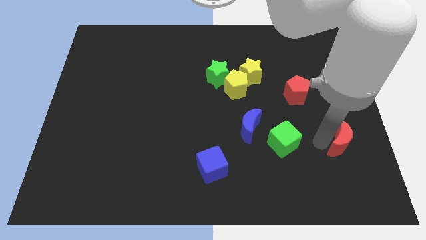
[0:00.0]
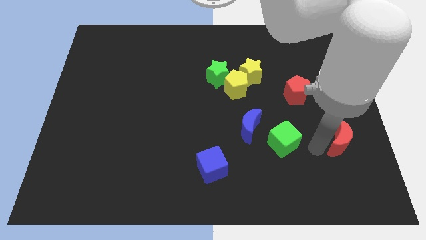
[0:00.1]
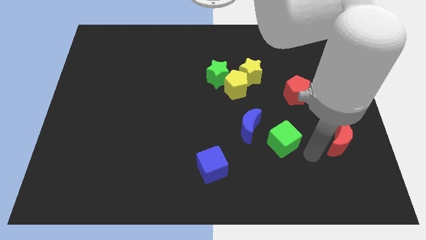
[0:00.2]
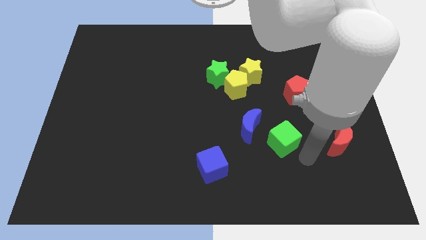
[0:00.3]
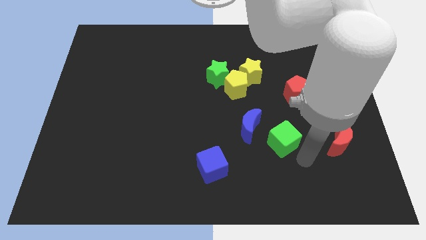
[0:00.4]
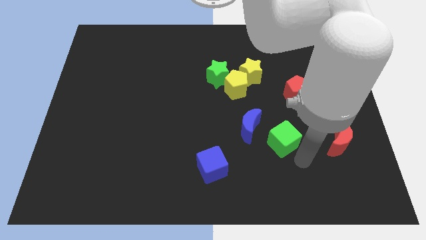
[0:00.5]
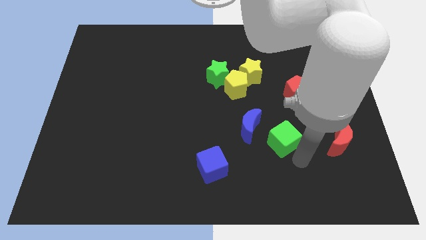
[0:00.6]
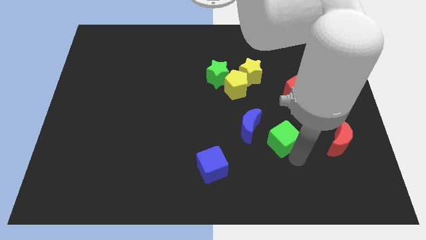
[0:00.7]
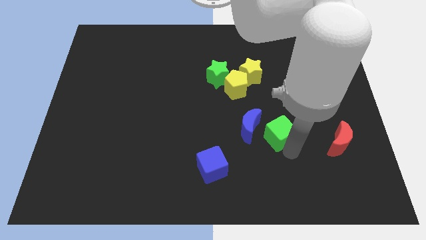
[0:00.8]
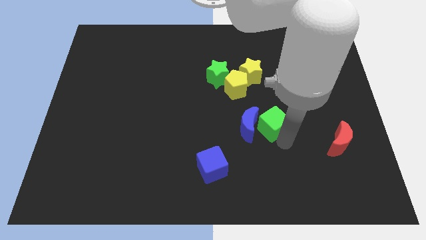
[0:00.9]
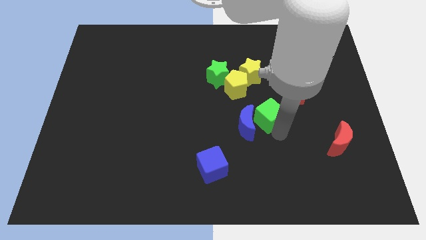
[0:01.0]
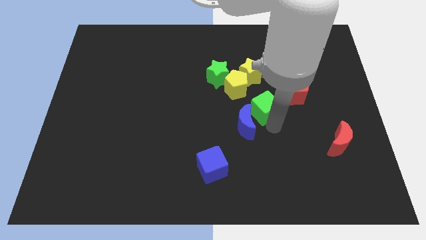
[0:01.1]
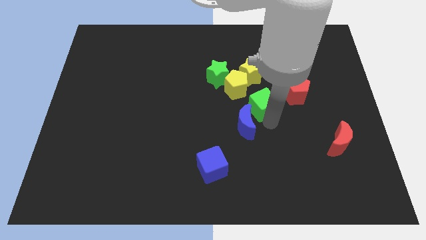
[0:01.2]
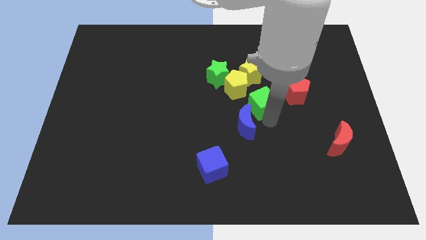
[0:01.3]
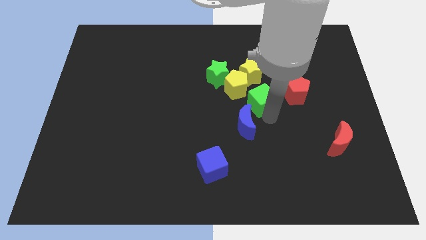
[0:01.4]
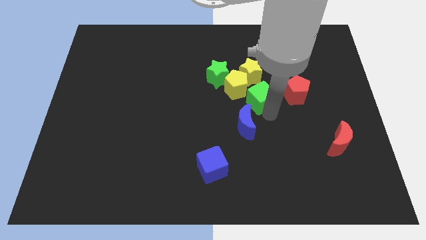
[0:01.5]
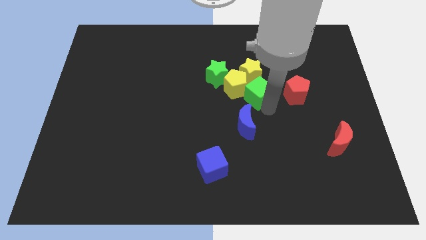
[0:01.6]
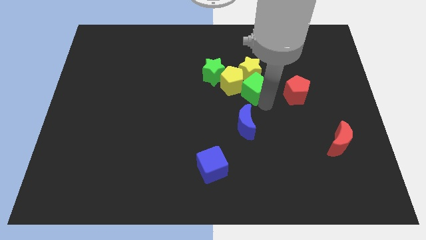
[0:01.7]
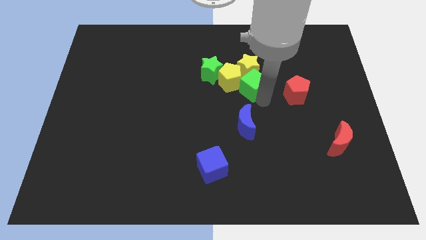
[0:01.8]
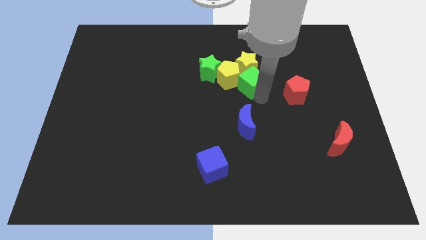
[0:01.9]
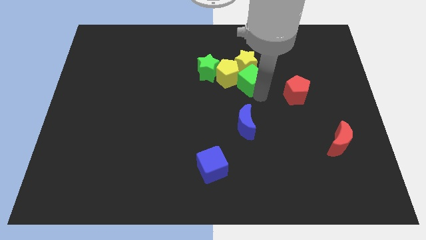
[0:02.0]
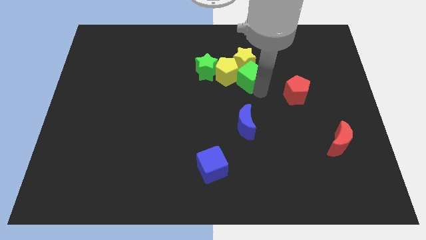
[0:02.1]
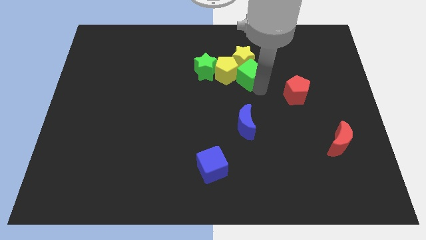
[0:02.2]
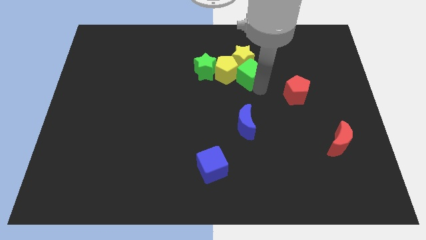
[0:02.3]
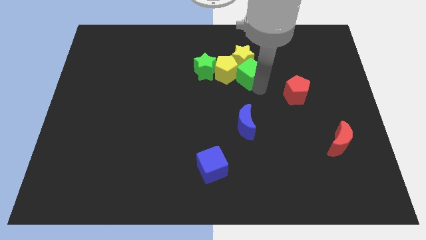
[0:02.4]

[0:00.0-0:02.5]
push green cube into the group of blocks

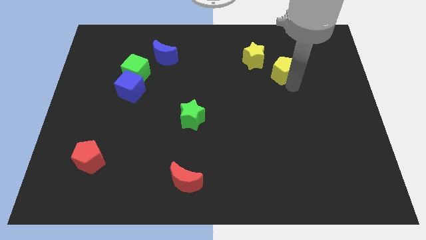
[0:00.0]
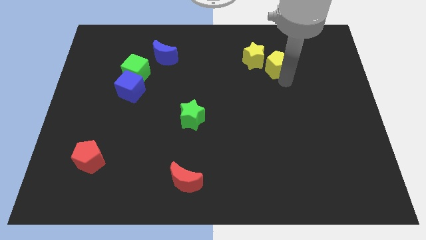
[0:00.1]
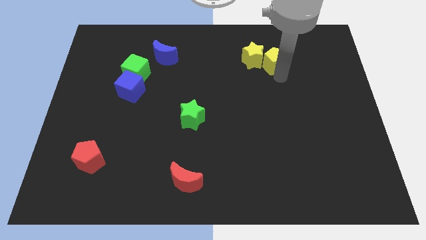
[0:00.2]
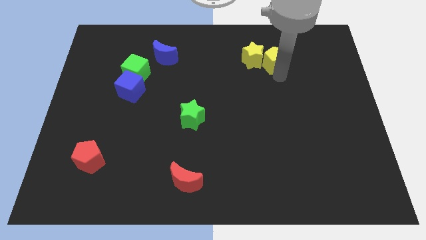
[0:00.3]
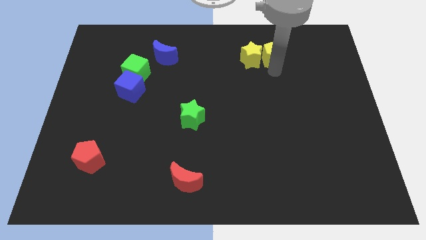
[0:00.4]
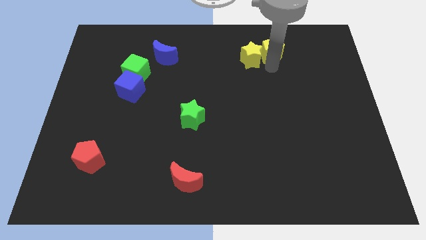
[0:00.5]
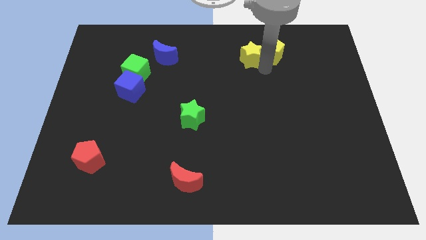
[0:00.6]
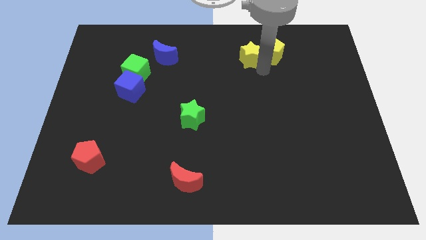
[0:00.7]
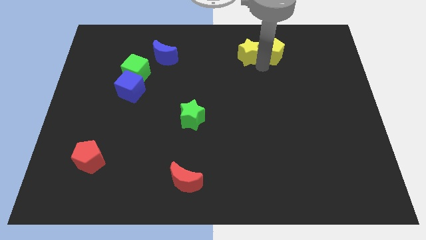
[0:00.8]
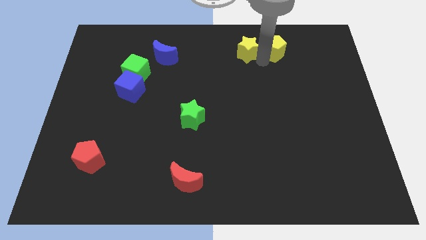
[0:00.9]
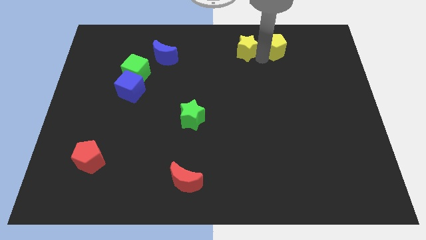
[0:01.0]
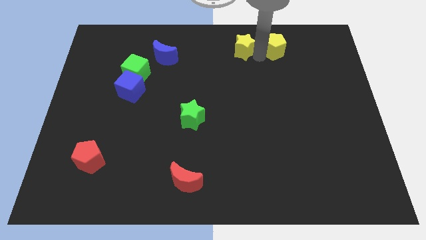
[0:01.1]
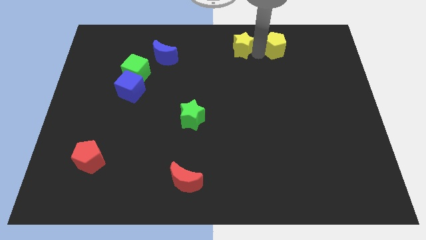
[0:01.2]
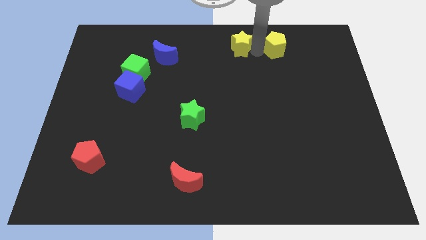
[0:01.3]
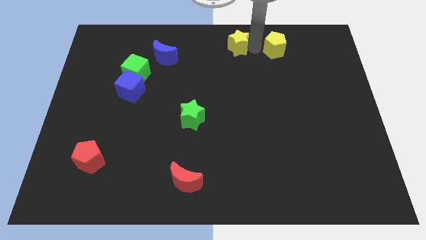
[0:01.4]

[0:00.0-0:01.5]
place your hand in between the yellow star and the yellow pentagon

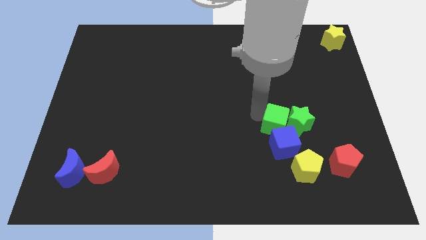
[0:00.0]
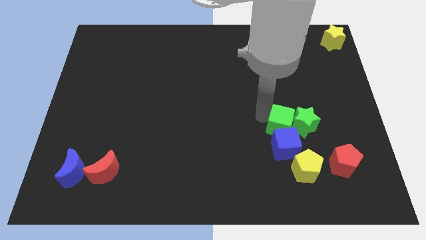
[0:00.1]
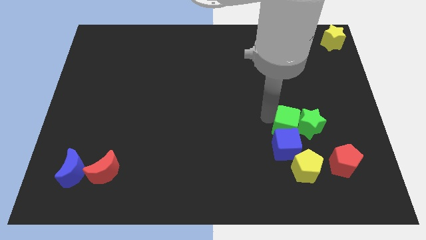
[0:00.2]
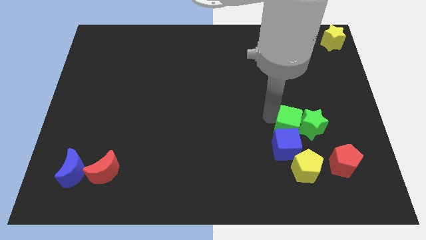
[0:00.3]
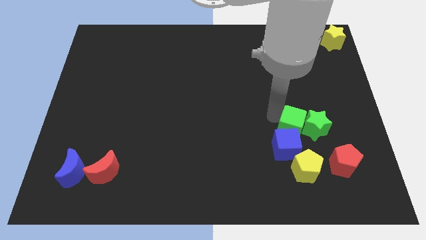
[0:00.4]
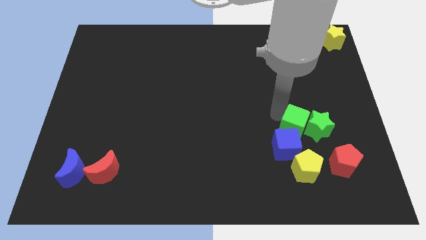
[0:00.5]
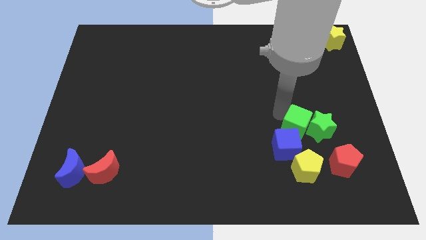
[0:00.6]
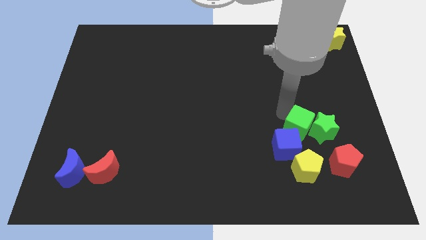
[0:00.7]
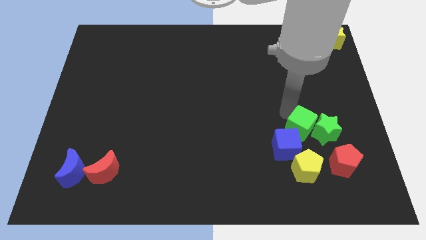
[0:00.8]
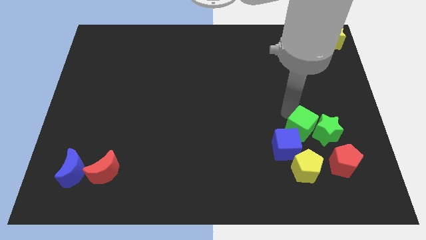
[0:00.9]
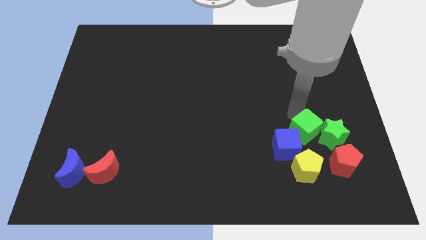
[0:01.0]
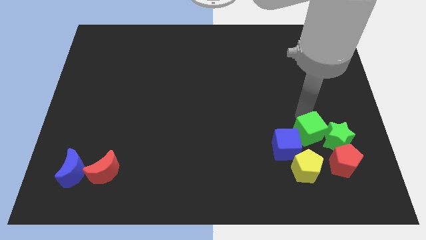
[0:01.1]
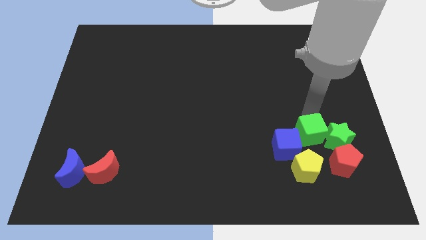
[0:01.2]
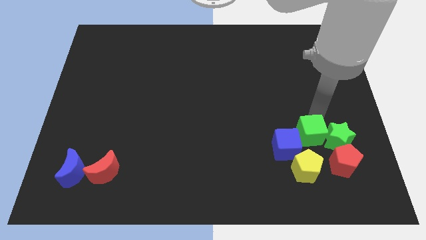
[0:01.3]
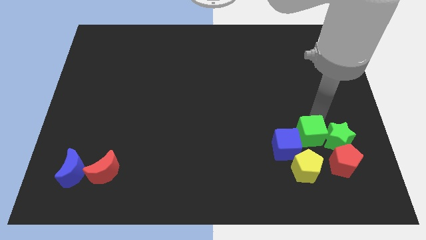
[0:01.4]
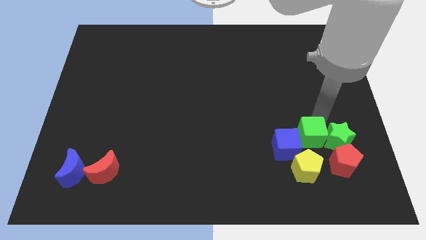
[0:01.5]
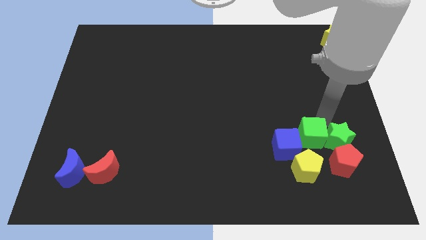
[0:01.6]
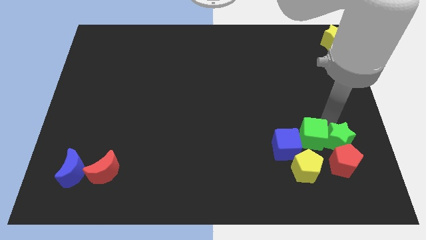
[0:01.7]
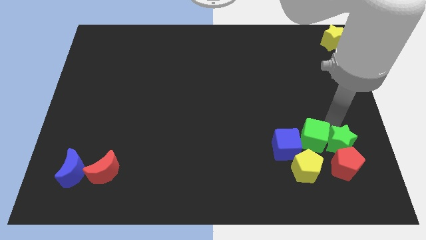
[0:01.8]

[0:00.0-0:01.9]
push the green cube between the green star and blue cube

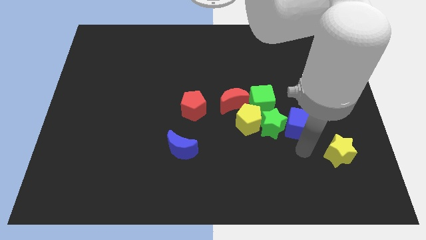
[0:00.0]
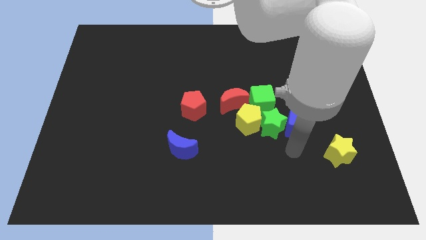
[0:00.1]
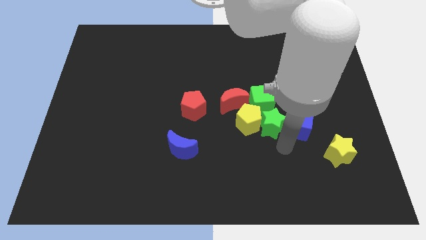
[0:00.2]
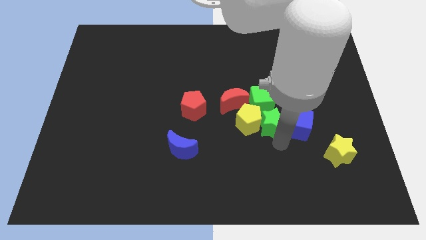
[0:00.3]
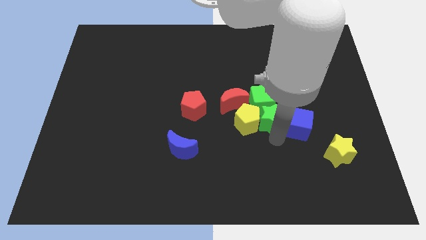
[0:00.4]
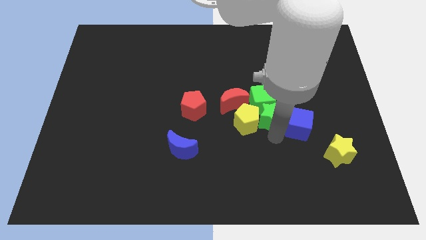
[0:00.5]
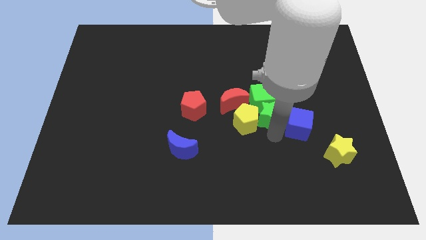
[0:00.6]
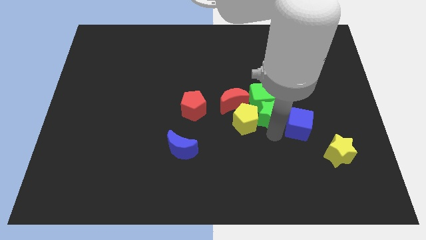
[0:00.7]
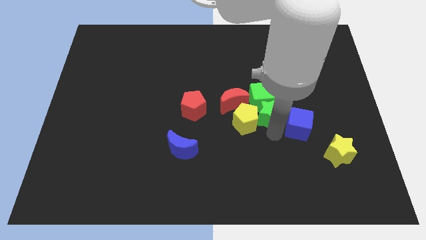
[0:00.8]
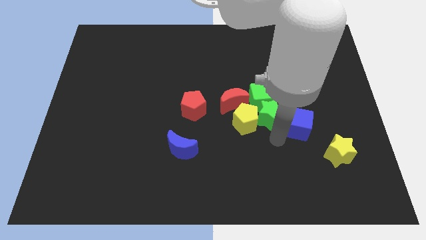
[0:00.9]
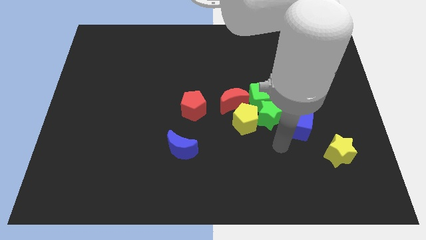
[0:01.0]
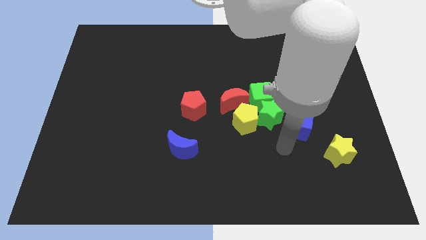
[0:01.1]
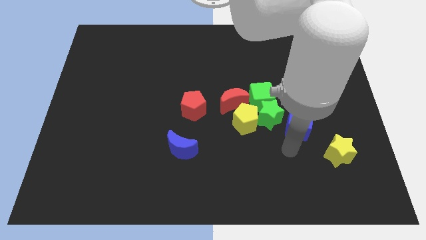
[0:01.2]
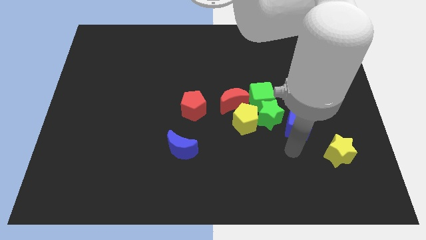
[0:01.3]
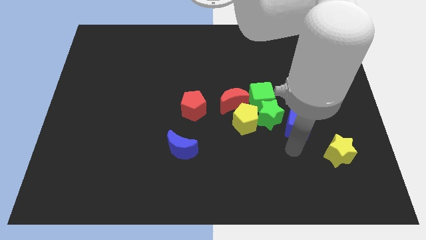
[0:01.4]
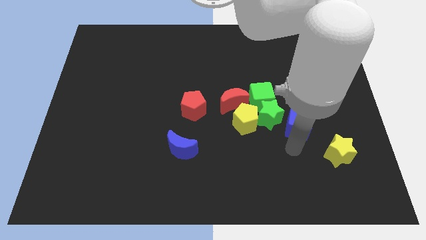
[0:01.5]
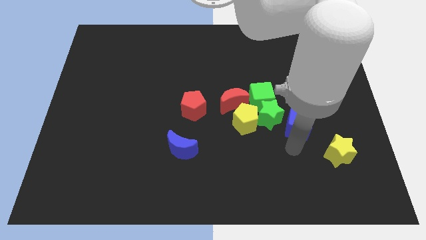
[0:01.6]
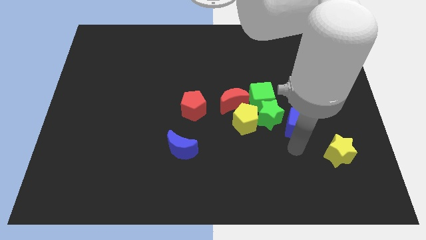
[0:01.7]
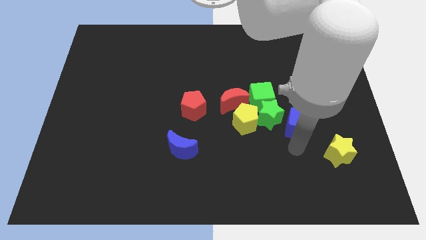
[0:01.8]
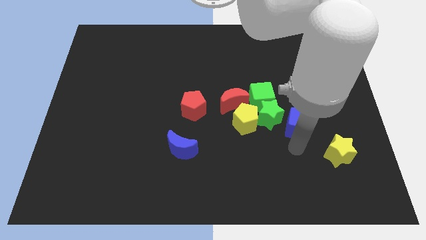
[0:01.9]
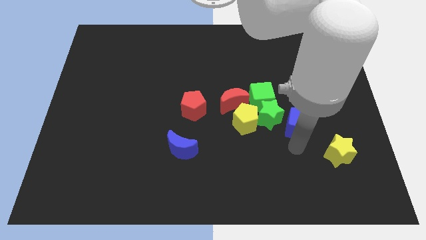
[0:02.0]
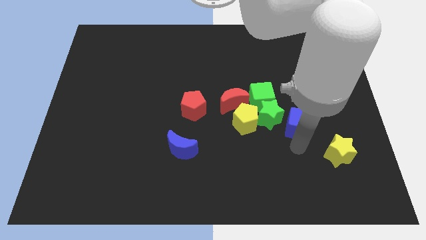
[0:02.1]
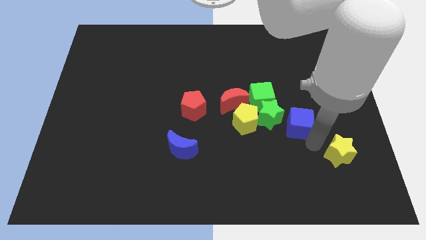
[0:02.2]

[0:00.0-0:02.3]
push the green star into the green cube

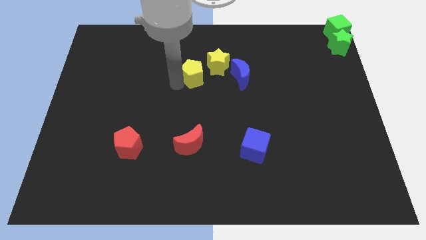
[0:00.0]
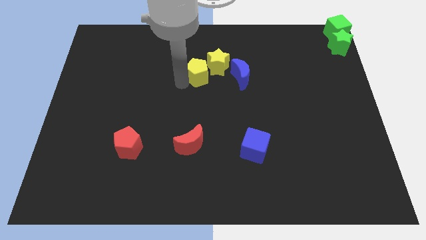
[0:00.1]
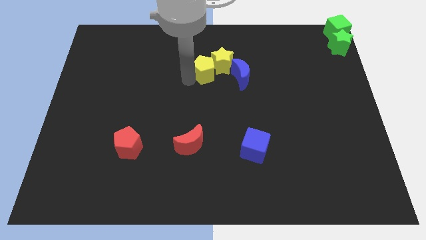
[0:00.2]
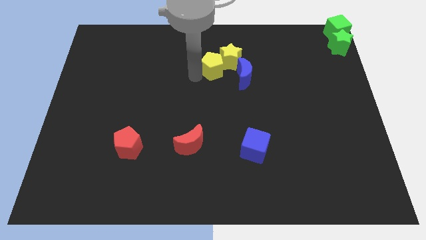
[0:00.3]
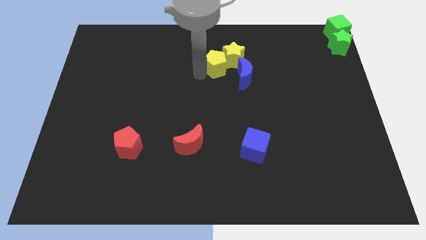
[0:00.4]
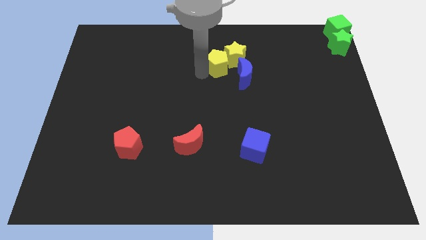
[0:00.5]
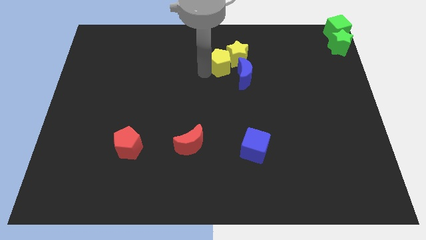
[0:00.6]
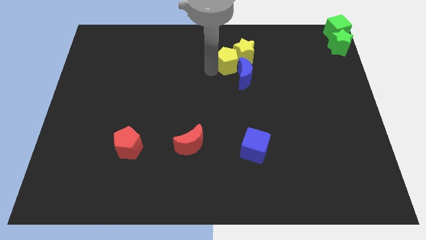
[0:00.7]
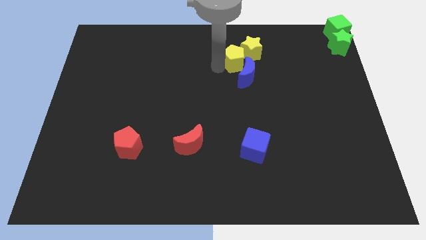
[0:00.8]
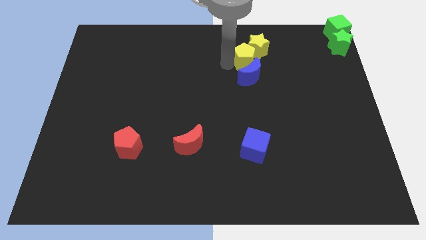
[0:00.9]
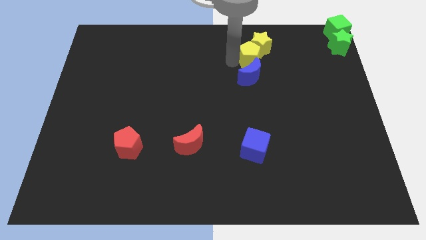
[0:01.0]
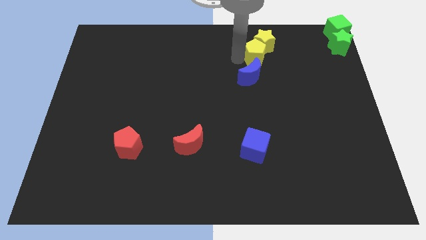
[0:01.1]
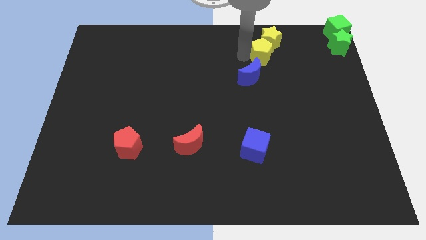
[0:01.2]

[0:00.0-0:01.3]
push yellow pentagon along with the yellow star towards the top right side of the board
